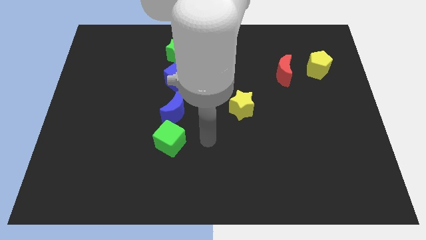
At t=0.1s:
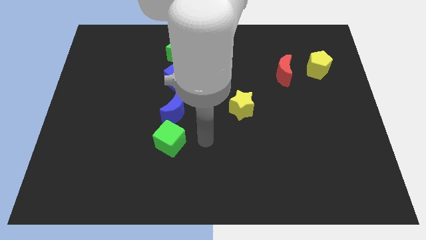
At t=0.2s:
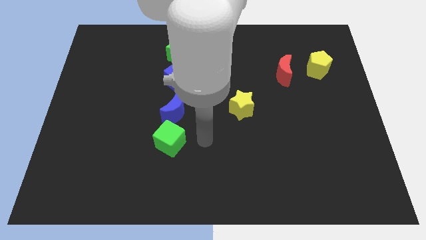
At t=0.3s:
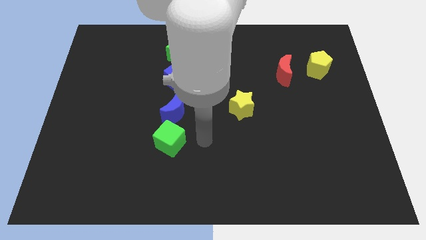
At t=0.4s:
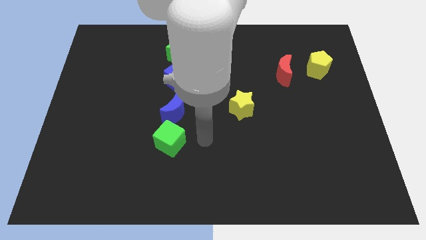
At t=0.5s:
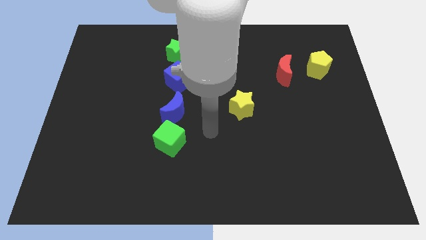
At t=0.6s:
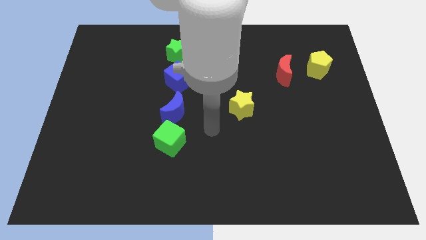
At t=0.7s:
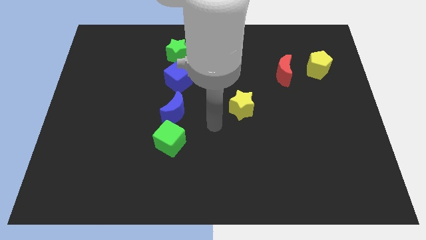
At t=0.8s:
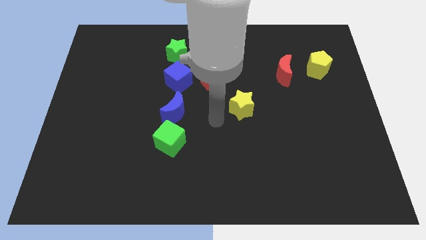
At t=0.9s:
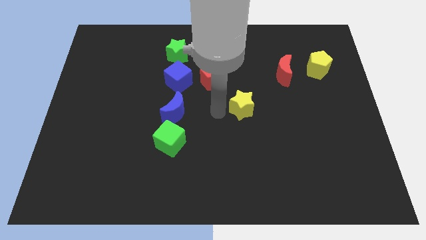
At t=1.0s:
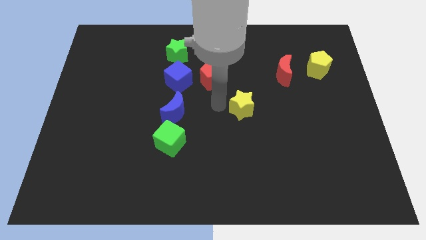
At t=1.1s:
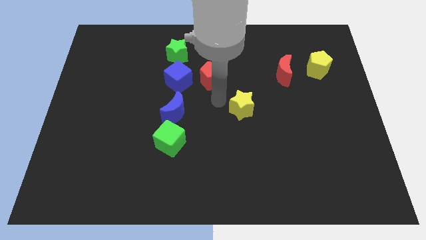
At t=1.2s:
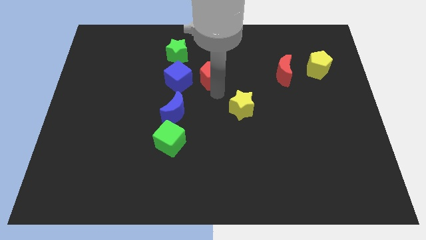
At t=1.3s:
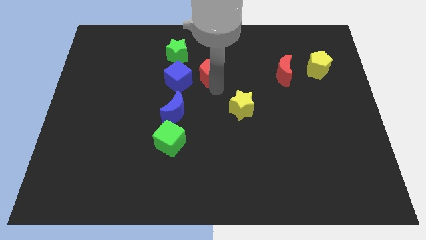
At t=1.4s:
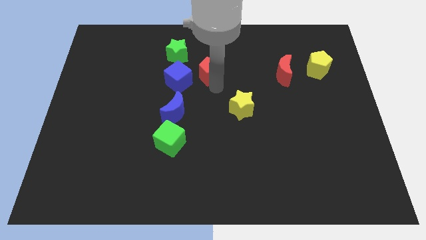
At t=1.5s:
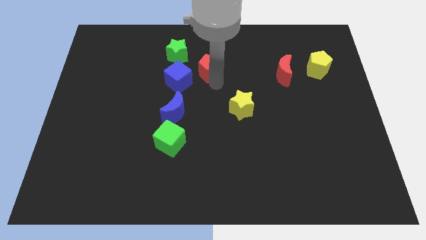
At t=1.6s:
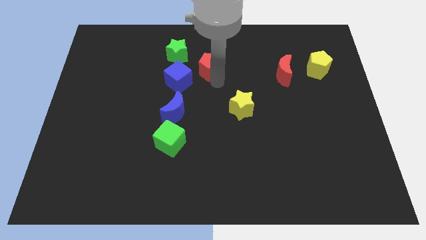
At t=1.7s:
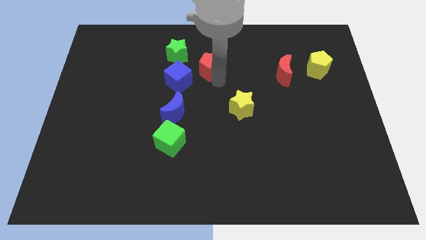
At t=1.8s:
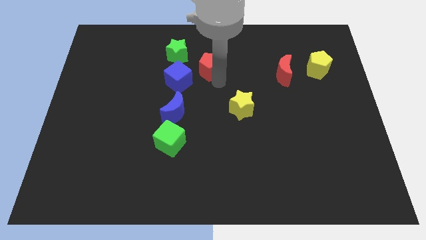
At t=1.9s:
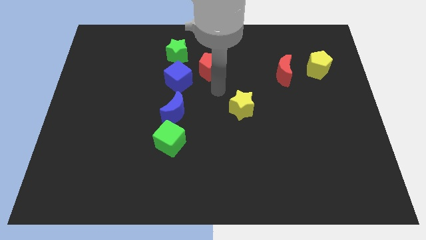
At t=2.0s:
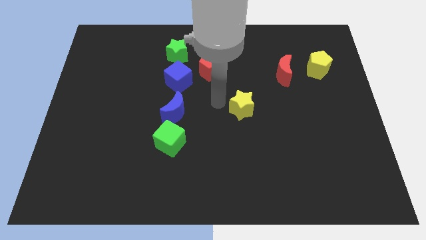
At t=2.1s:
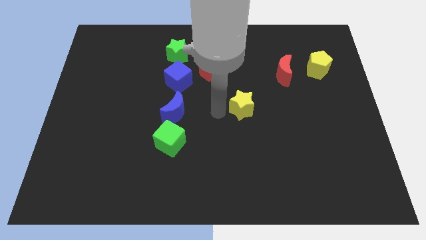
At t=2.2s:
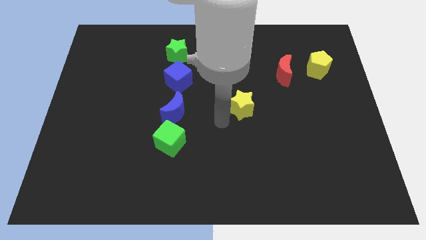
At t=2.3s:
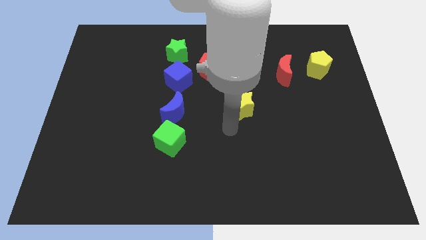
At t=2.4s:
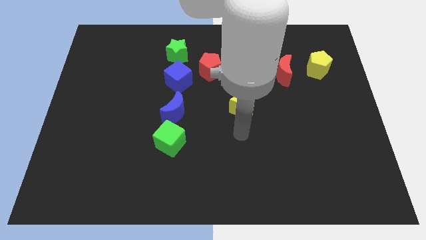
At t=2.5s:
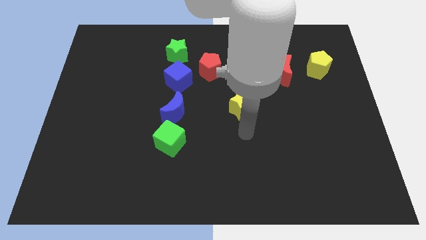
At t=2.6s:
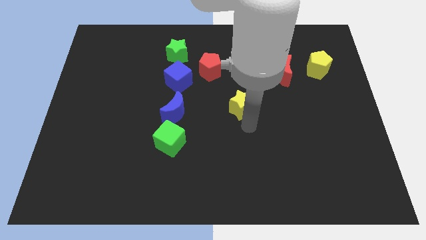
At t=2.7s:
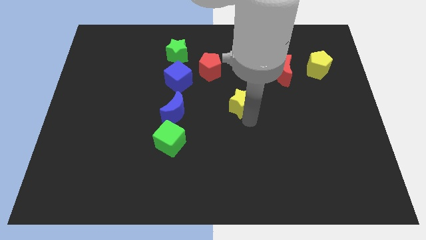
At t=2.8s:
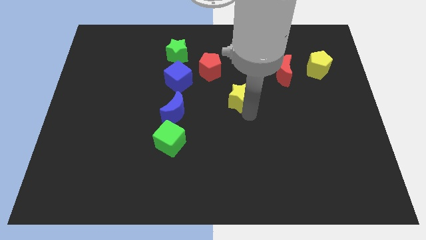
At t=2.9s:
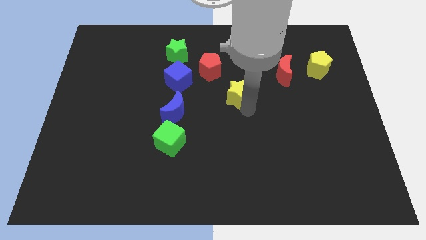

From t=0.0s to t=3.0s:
move the red pentagon slightly to the top

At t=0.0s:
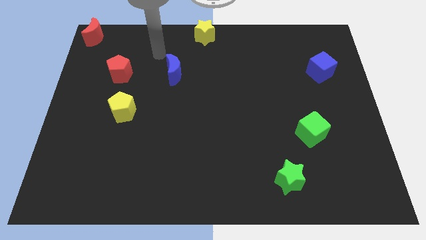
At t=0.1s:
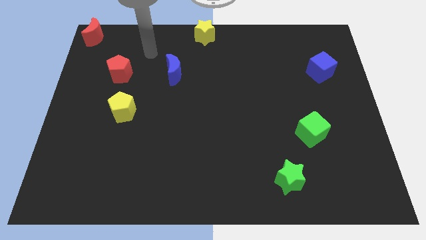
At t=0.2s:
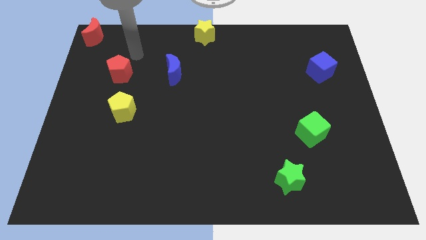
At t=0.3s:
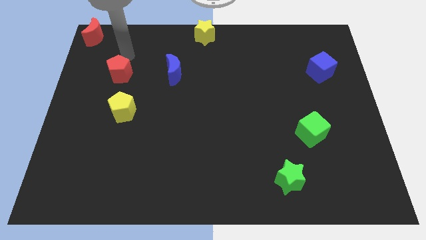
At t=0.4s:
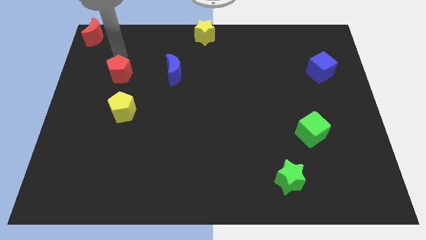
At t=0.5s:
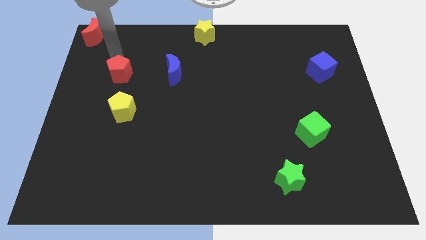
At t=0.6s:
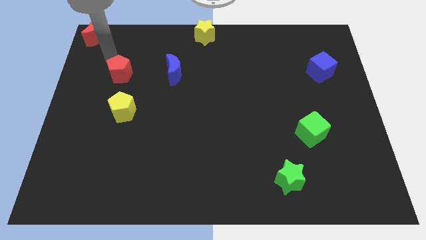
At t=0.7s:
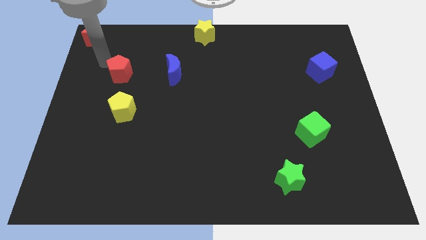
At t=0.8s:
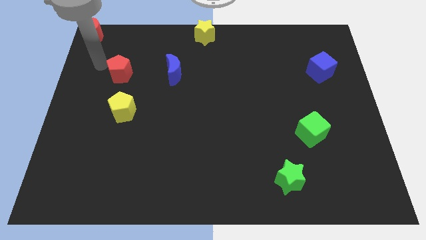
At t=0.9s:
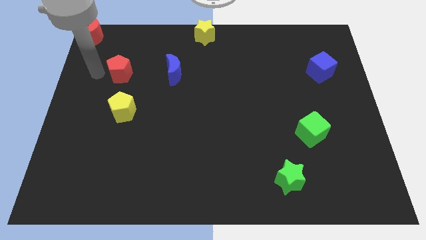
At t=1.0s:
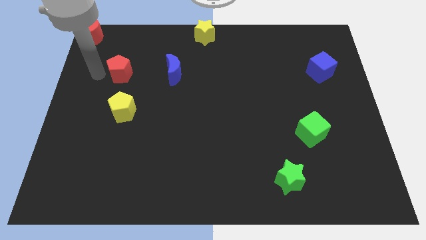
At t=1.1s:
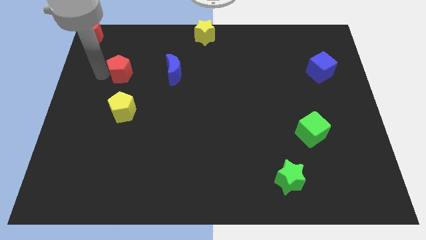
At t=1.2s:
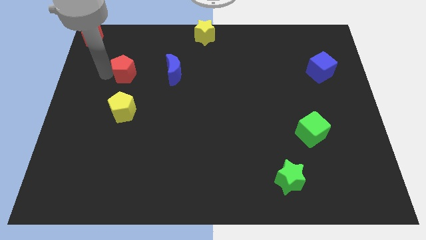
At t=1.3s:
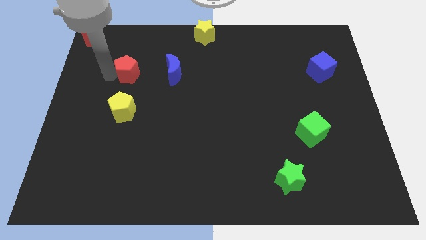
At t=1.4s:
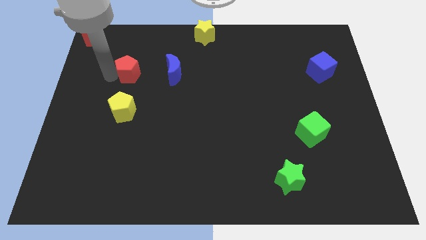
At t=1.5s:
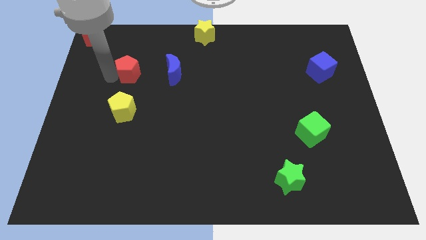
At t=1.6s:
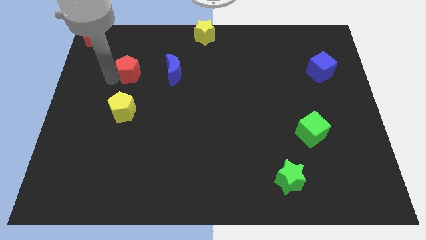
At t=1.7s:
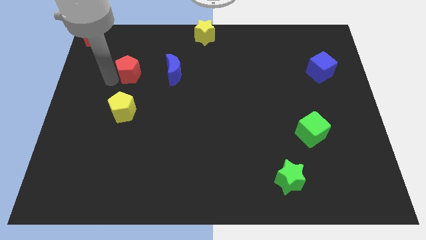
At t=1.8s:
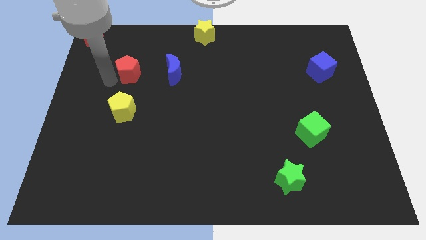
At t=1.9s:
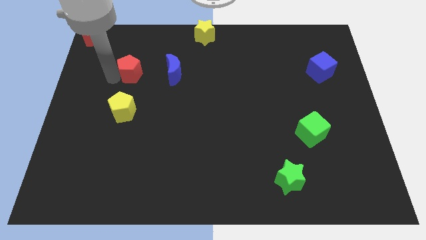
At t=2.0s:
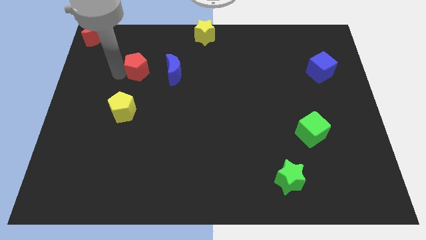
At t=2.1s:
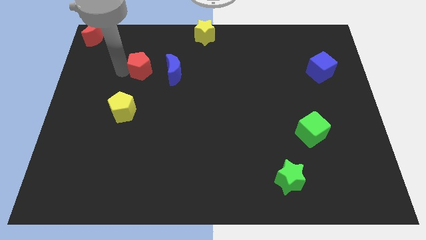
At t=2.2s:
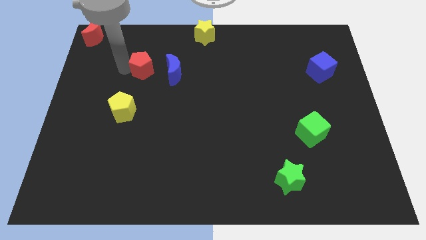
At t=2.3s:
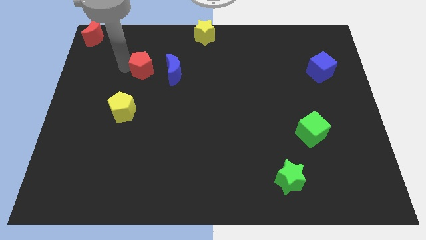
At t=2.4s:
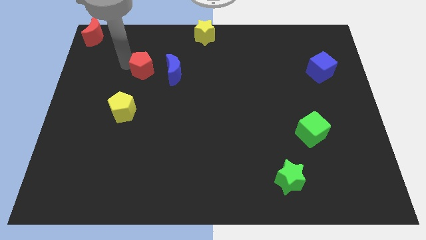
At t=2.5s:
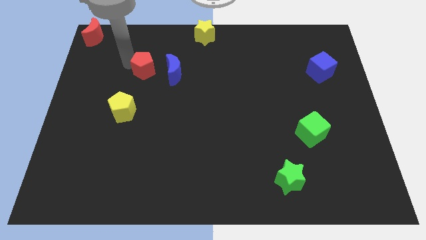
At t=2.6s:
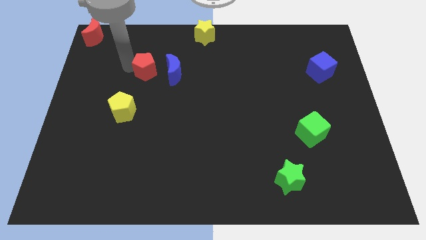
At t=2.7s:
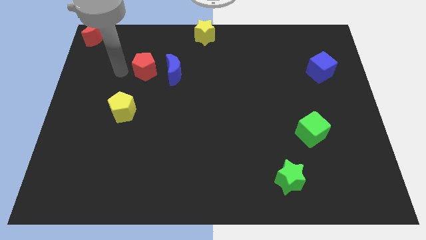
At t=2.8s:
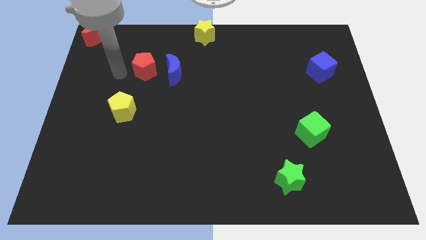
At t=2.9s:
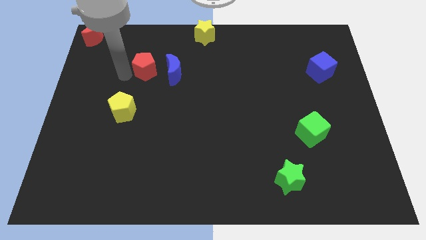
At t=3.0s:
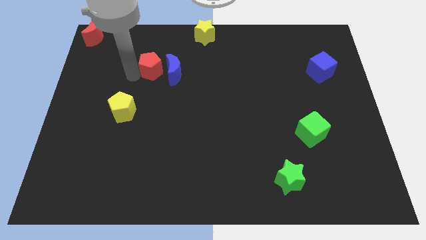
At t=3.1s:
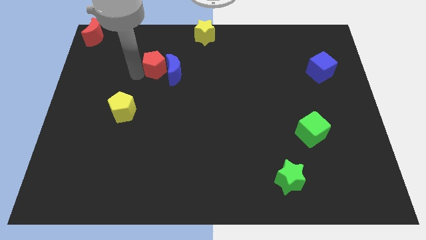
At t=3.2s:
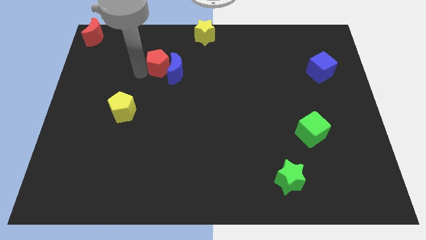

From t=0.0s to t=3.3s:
push the red pentagon to the left side of the blue crescent

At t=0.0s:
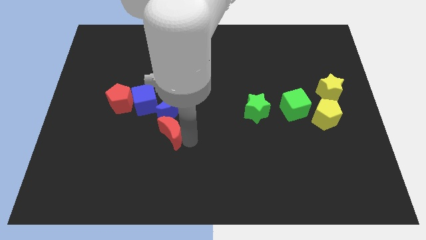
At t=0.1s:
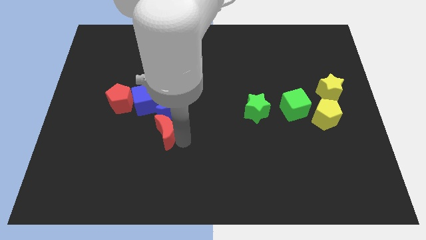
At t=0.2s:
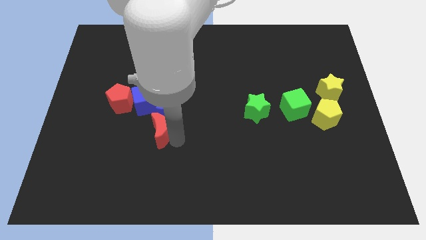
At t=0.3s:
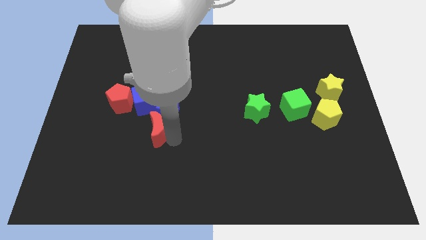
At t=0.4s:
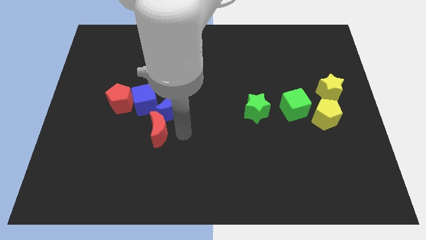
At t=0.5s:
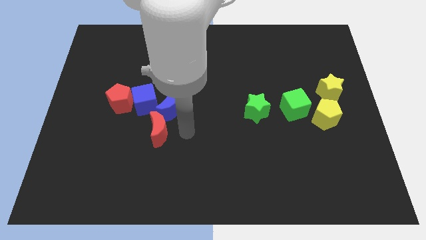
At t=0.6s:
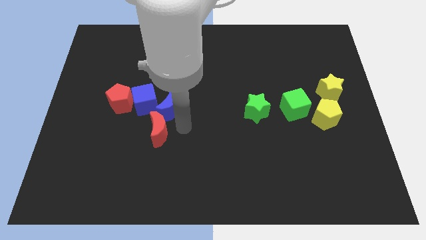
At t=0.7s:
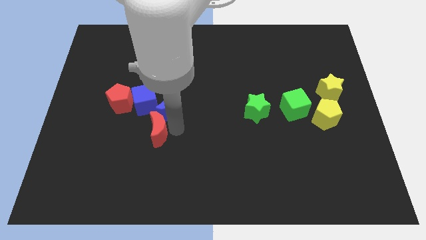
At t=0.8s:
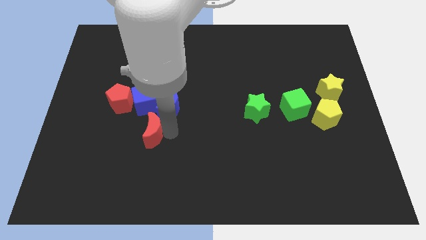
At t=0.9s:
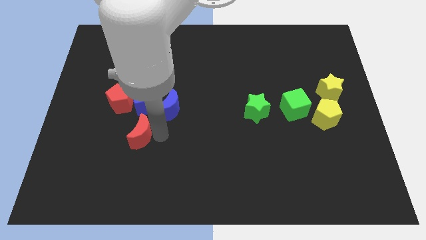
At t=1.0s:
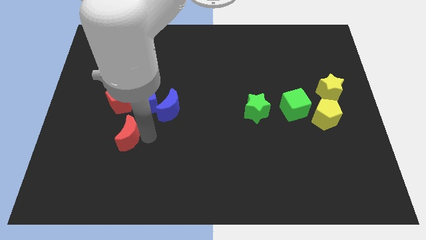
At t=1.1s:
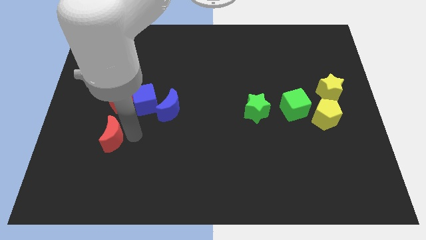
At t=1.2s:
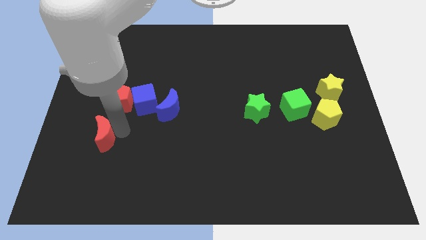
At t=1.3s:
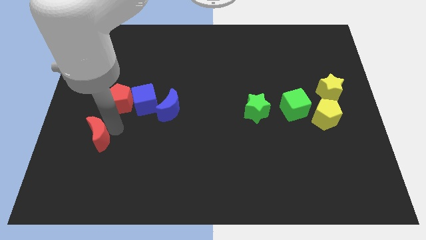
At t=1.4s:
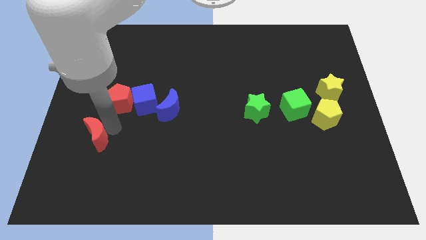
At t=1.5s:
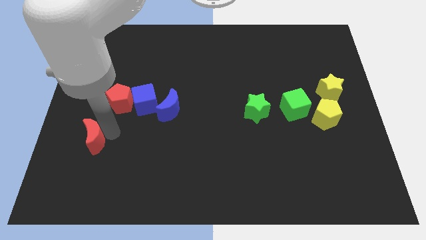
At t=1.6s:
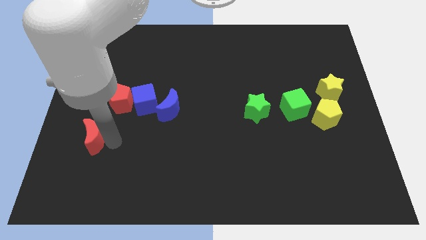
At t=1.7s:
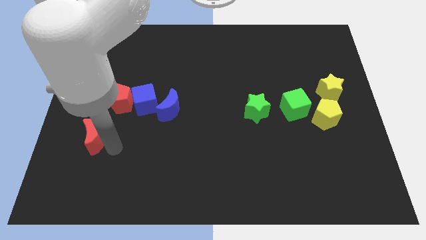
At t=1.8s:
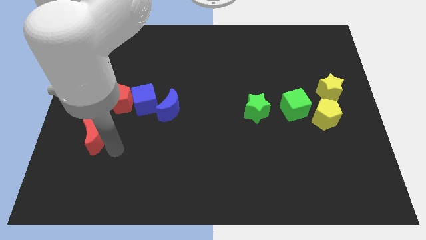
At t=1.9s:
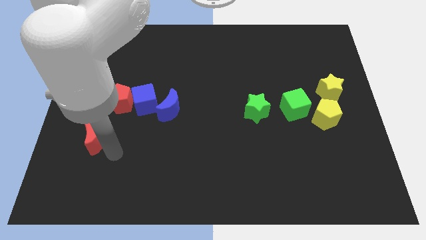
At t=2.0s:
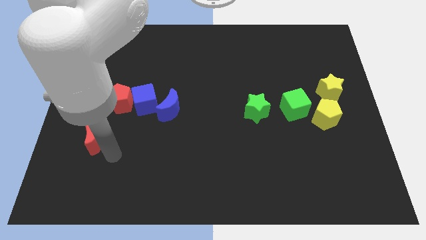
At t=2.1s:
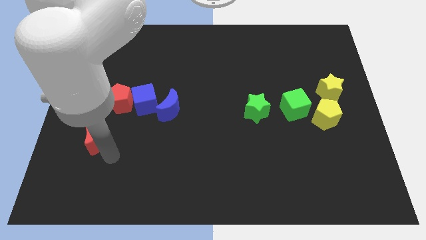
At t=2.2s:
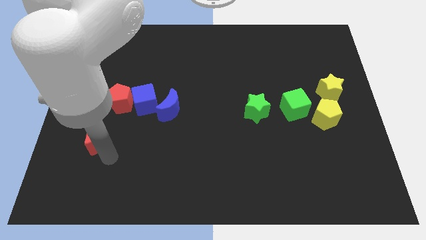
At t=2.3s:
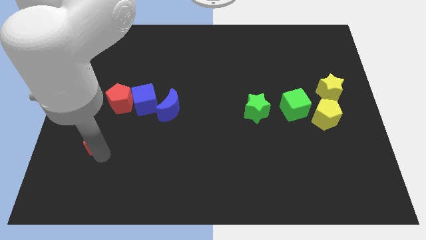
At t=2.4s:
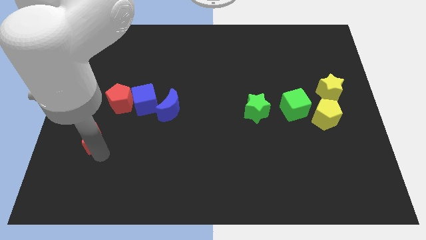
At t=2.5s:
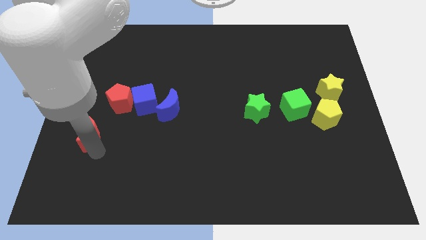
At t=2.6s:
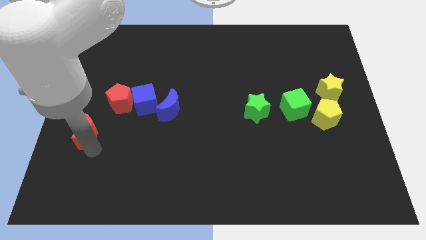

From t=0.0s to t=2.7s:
move red moon left below the red pentagon
